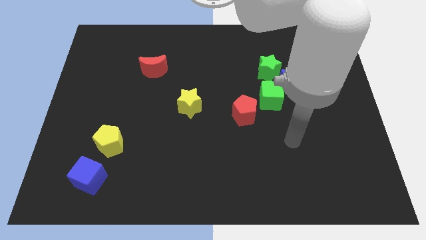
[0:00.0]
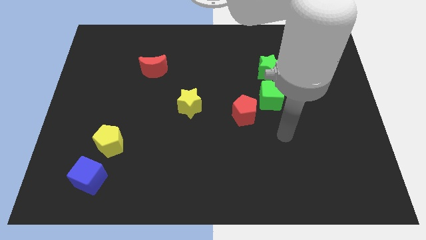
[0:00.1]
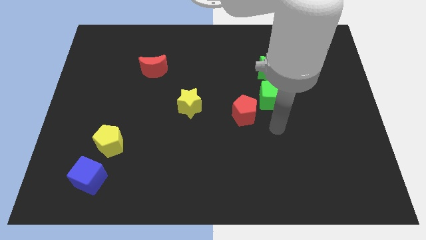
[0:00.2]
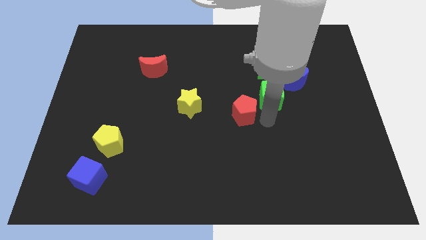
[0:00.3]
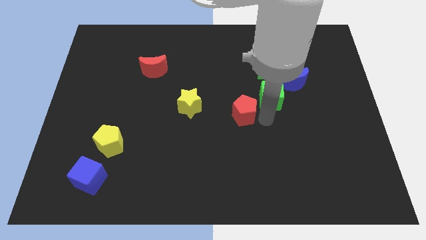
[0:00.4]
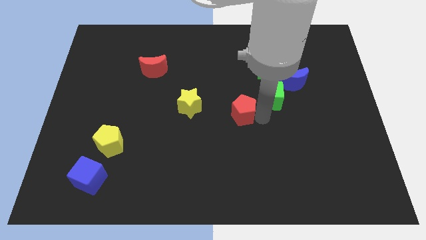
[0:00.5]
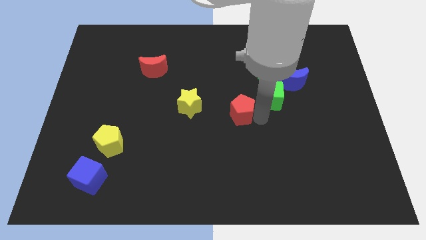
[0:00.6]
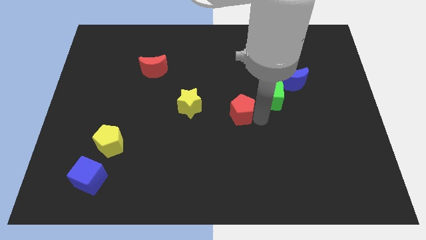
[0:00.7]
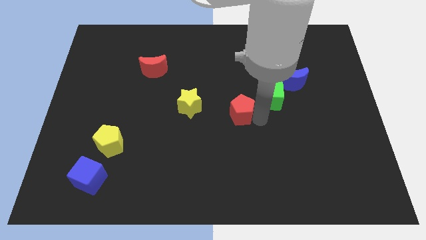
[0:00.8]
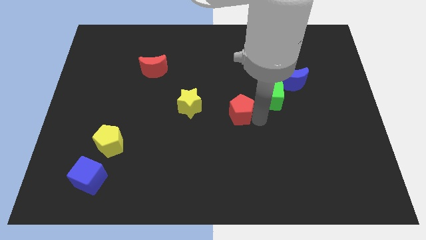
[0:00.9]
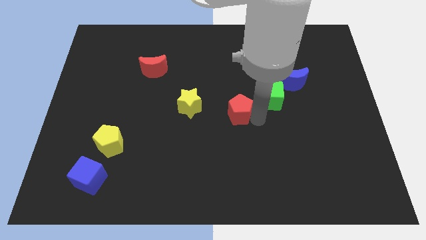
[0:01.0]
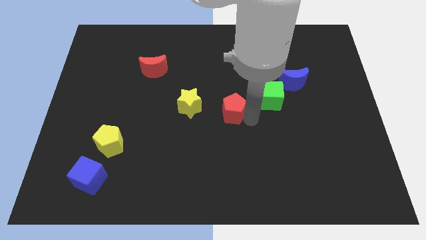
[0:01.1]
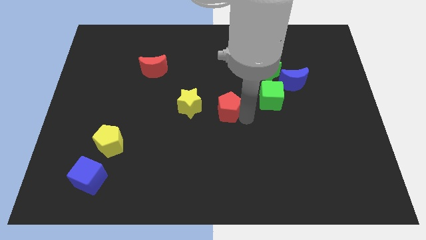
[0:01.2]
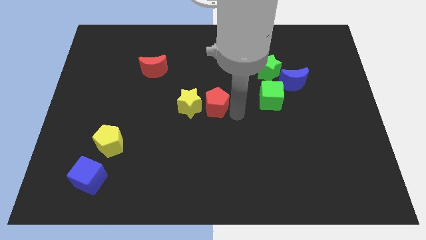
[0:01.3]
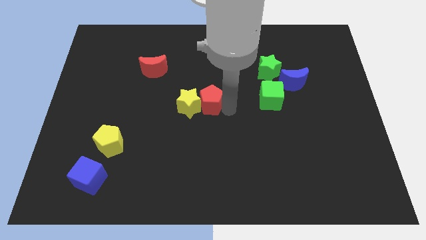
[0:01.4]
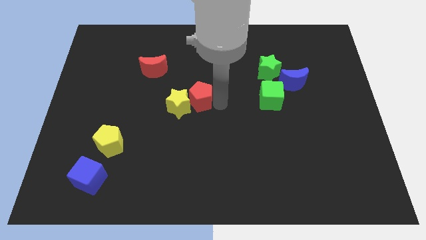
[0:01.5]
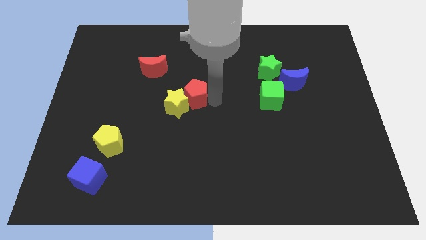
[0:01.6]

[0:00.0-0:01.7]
push the red pentagon into the yellow star

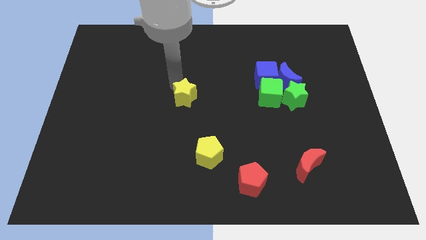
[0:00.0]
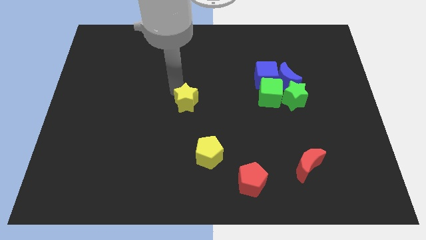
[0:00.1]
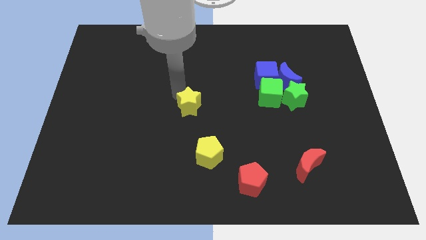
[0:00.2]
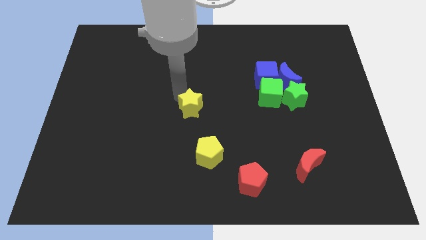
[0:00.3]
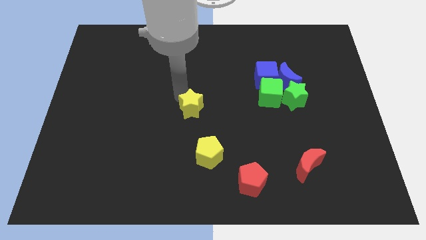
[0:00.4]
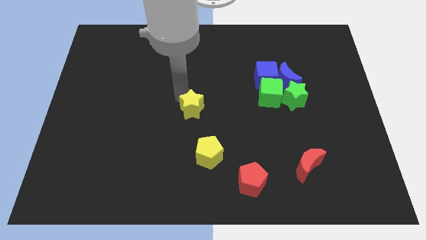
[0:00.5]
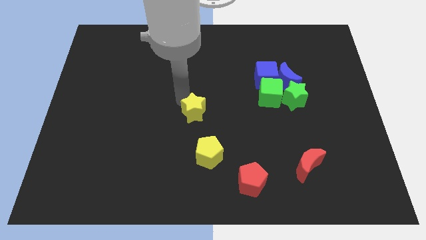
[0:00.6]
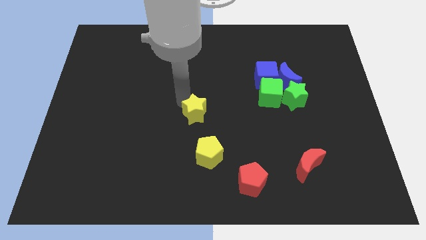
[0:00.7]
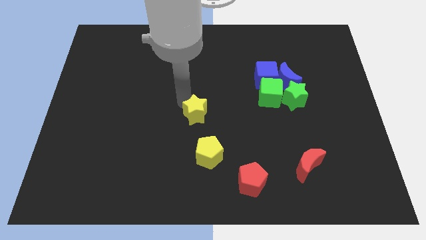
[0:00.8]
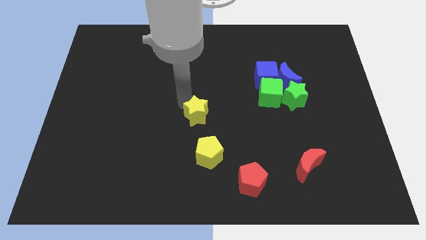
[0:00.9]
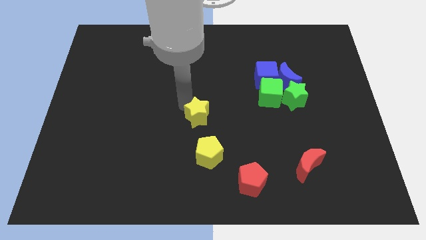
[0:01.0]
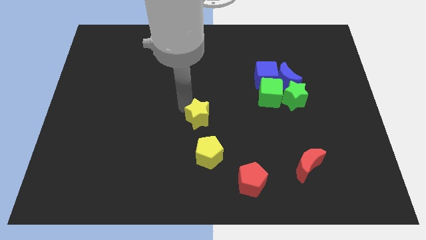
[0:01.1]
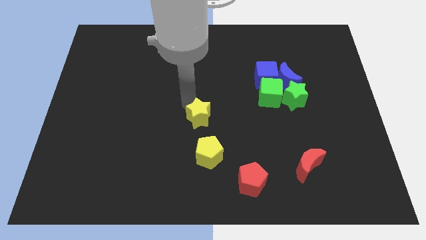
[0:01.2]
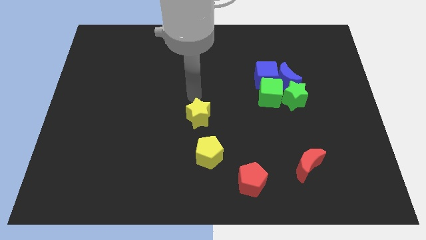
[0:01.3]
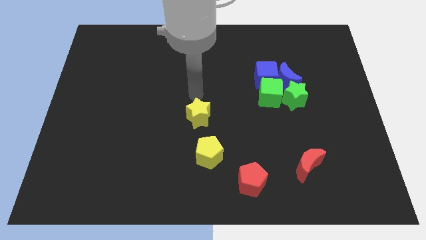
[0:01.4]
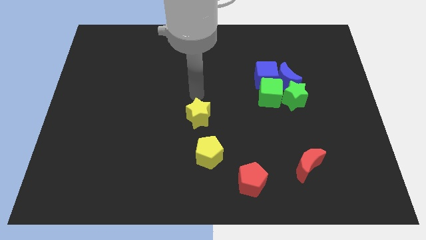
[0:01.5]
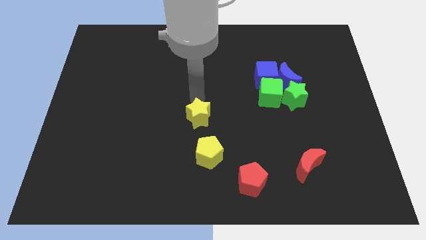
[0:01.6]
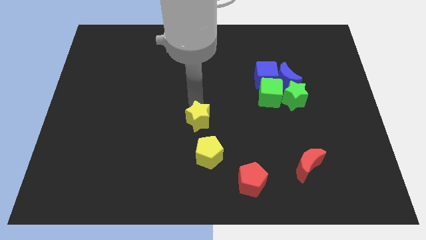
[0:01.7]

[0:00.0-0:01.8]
push yellow star slightly towards yellow pentagon

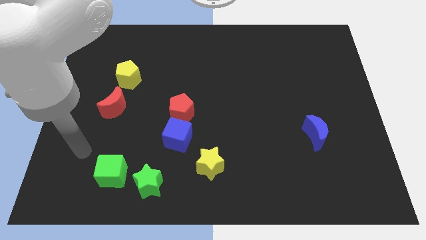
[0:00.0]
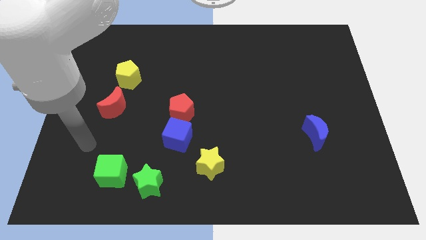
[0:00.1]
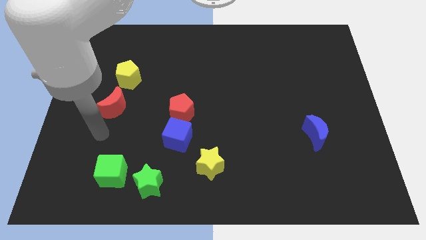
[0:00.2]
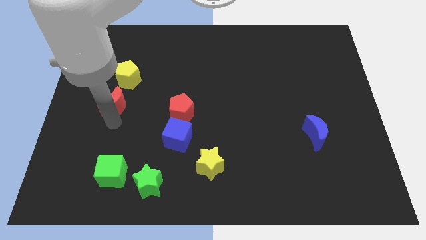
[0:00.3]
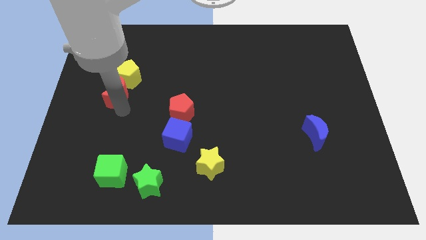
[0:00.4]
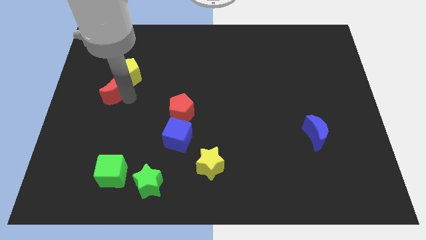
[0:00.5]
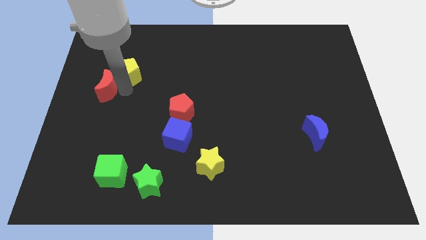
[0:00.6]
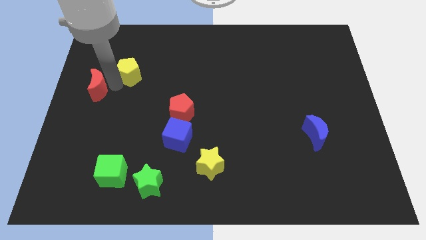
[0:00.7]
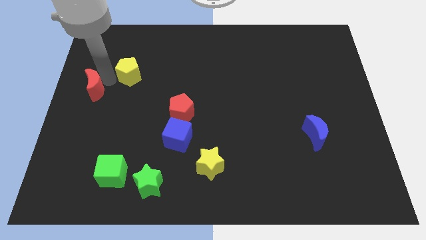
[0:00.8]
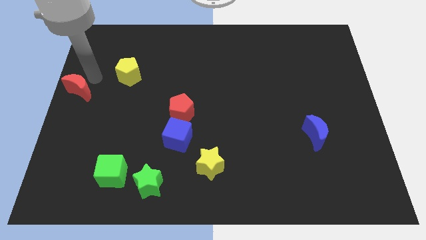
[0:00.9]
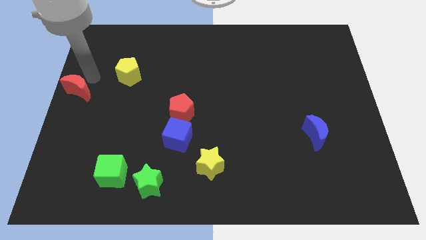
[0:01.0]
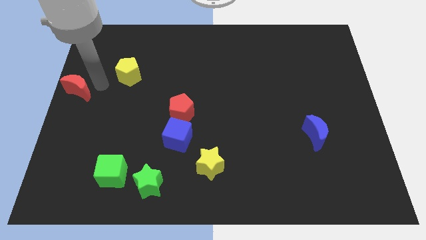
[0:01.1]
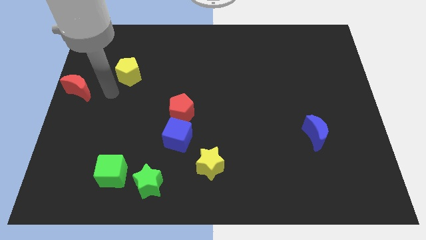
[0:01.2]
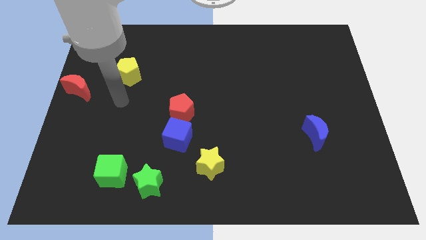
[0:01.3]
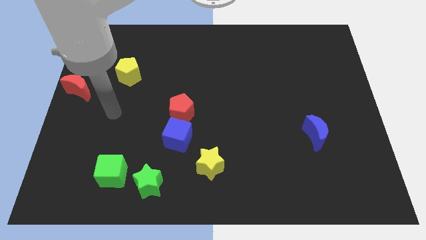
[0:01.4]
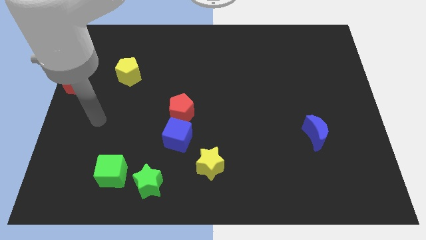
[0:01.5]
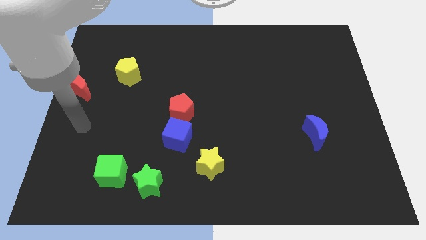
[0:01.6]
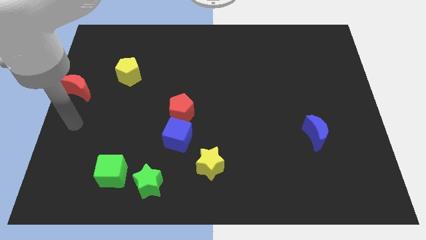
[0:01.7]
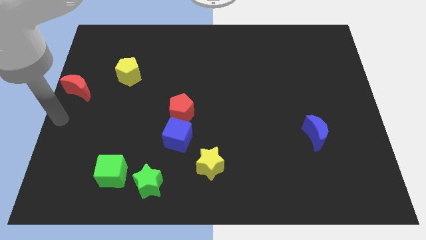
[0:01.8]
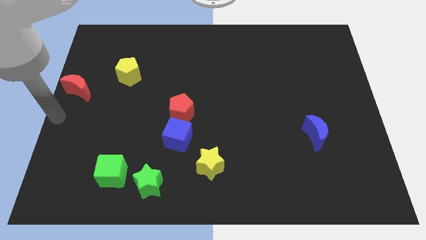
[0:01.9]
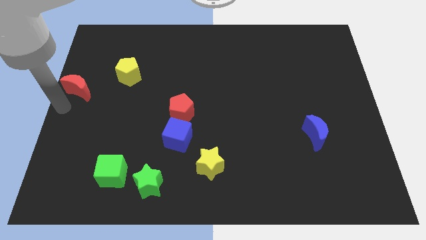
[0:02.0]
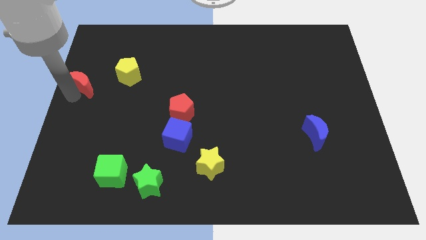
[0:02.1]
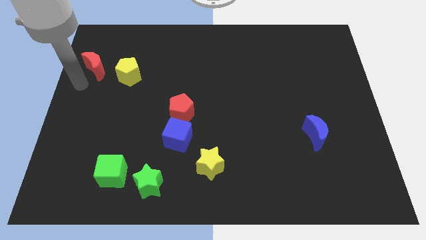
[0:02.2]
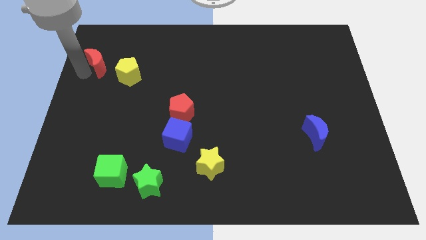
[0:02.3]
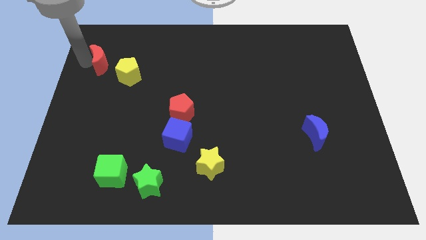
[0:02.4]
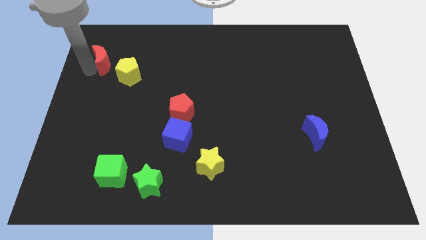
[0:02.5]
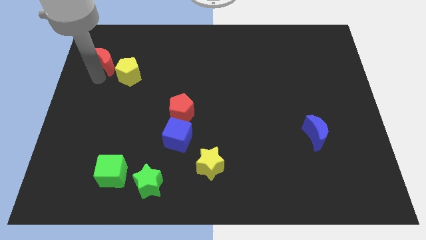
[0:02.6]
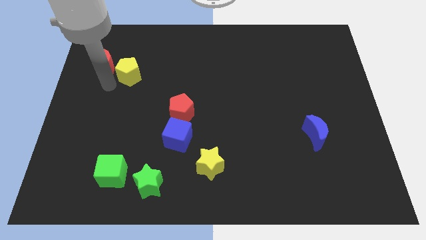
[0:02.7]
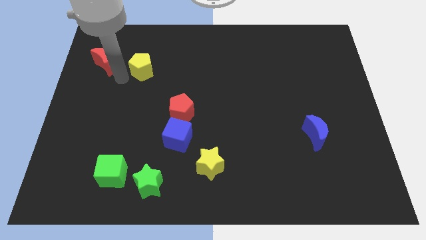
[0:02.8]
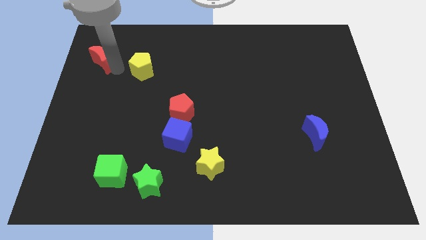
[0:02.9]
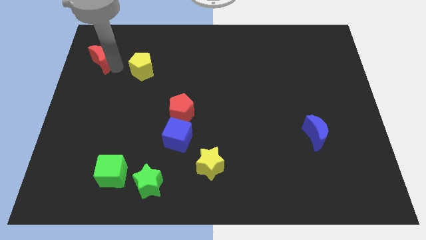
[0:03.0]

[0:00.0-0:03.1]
move the red crescent to the left side of the yellow pentagon

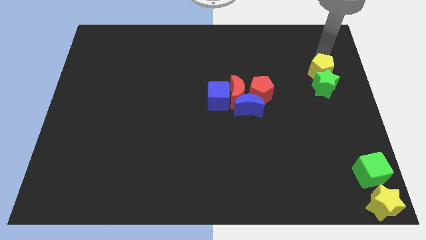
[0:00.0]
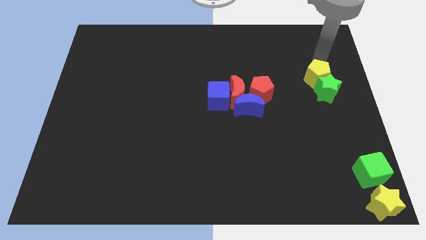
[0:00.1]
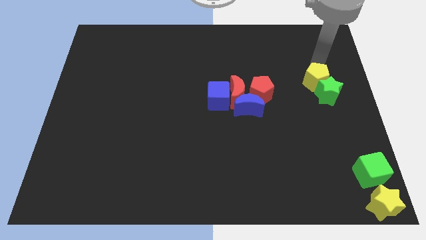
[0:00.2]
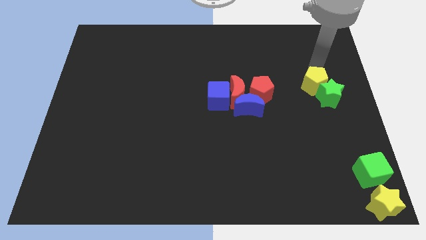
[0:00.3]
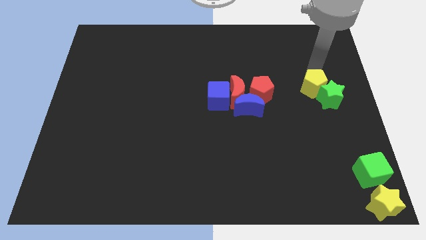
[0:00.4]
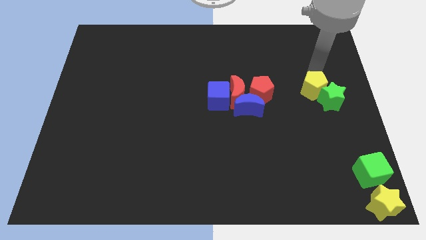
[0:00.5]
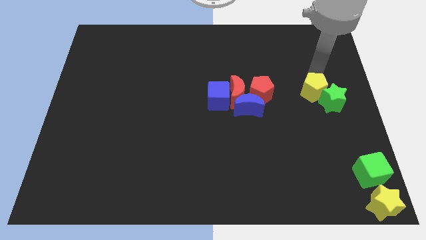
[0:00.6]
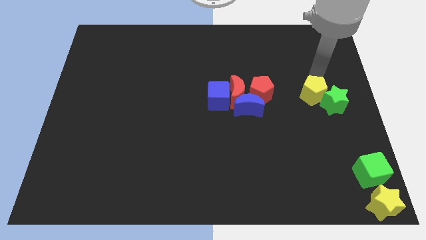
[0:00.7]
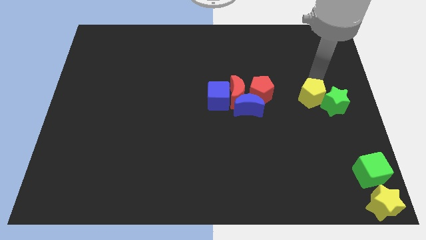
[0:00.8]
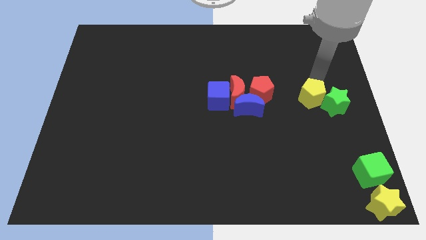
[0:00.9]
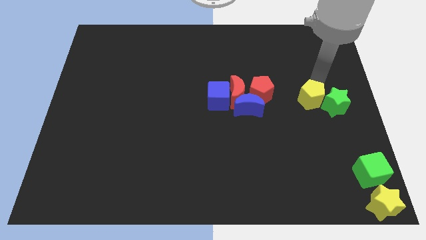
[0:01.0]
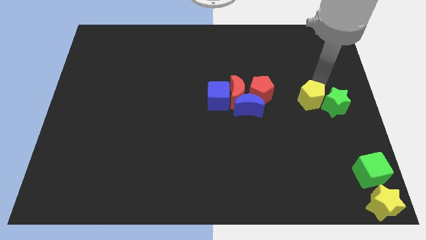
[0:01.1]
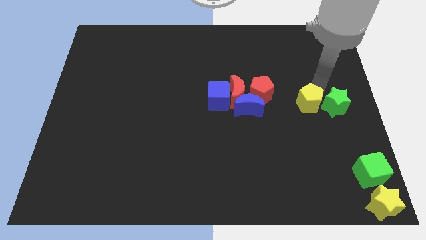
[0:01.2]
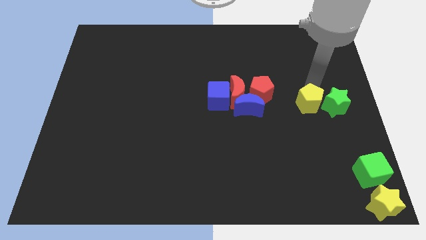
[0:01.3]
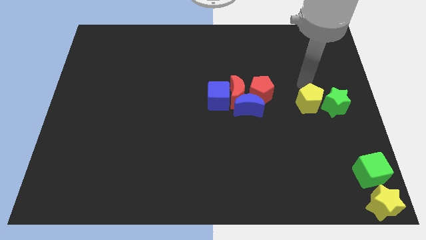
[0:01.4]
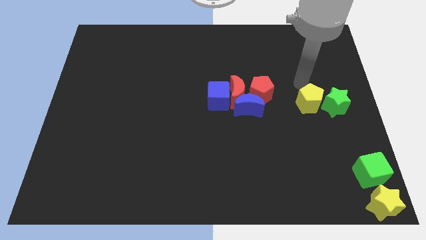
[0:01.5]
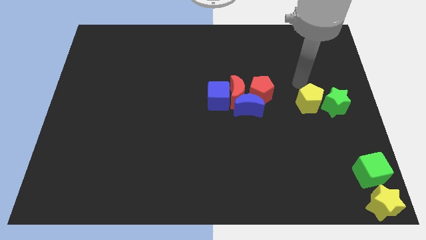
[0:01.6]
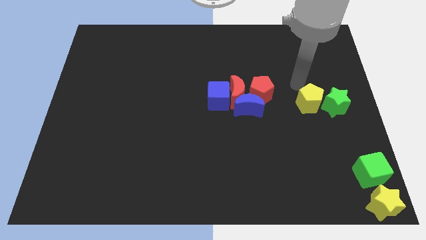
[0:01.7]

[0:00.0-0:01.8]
push the yellow pentagon and green star slightly downwards of the board

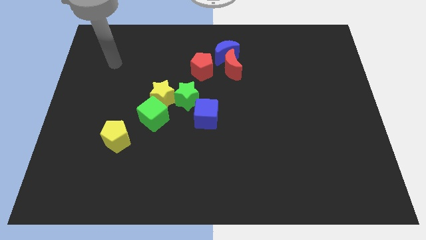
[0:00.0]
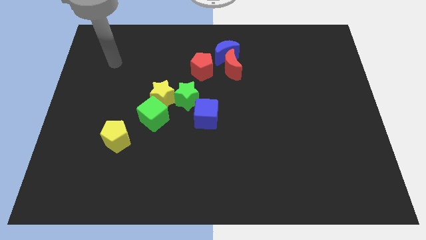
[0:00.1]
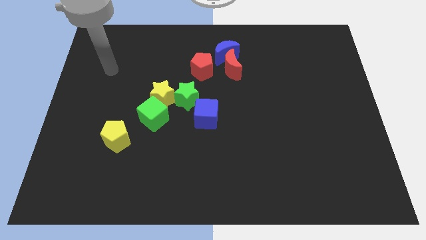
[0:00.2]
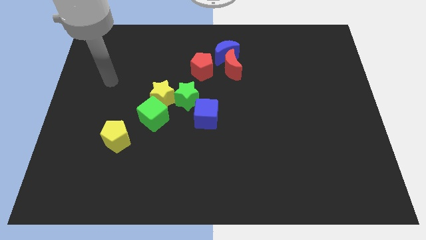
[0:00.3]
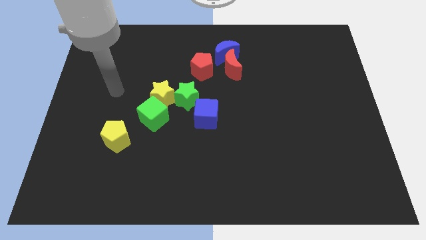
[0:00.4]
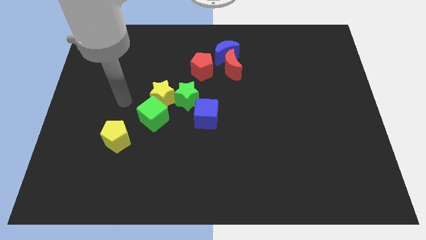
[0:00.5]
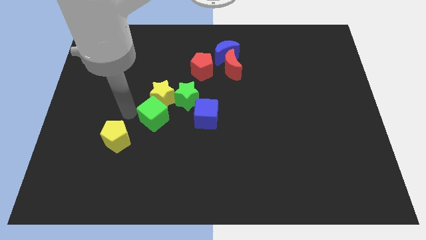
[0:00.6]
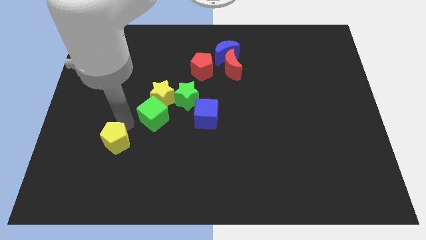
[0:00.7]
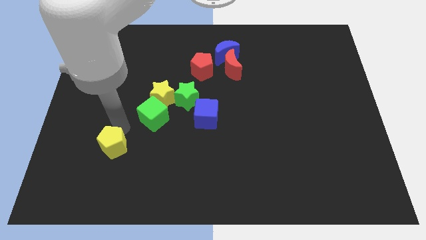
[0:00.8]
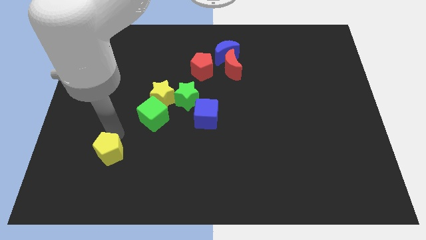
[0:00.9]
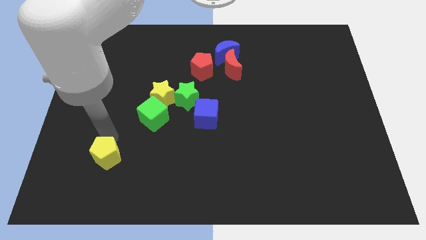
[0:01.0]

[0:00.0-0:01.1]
slide yellow pentagon slightly down
